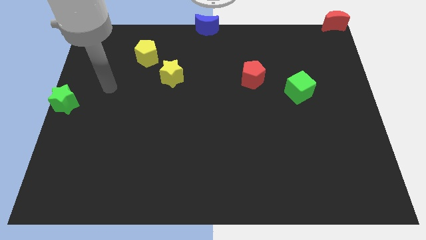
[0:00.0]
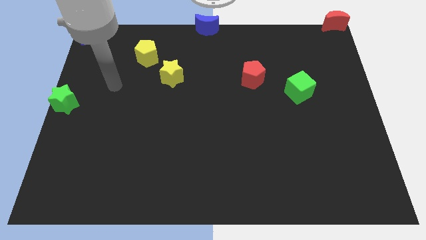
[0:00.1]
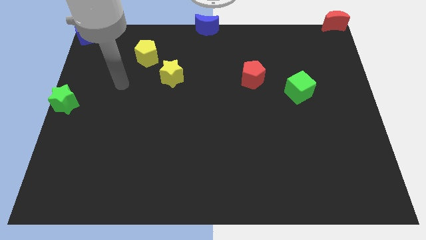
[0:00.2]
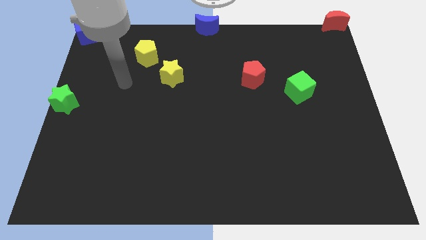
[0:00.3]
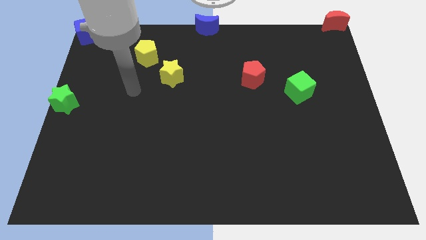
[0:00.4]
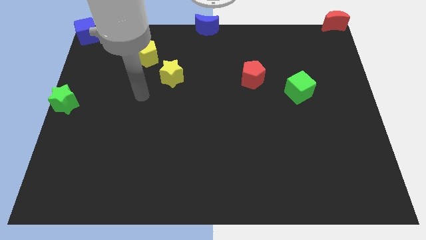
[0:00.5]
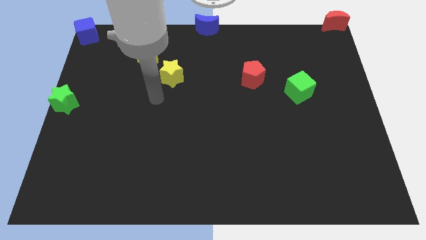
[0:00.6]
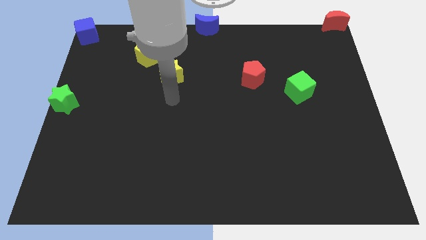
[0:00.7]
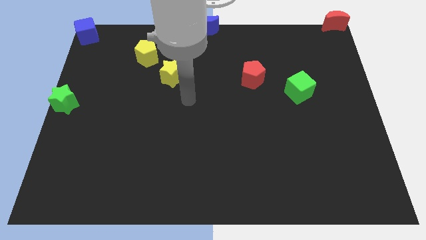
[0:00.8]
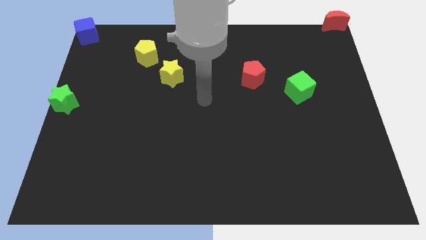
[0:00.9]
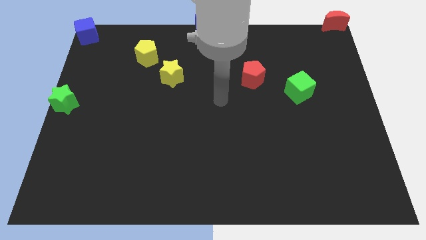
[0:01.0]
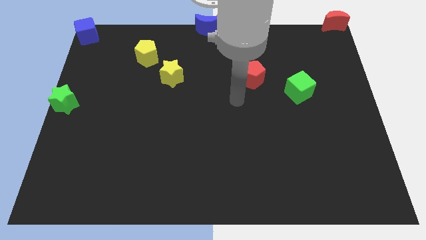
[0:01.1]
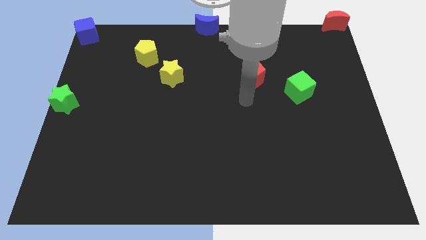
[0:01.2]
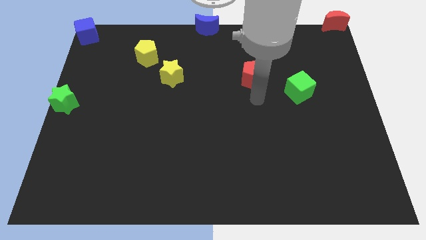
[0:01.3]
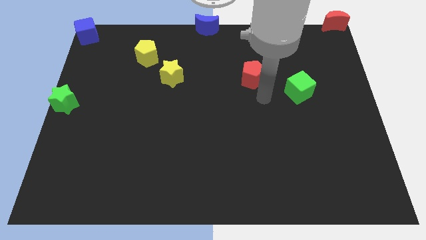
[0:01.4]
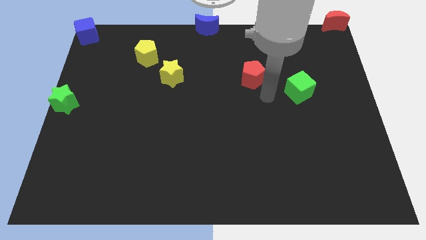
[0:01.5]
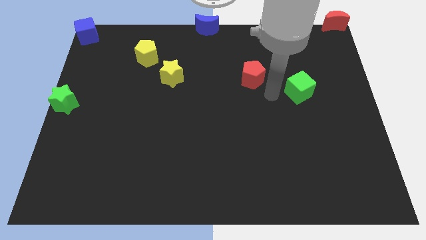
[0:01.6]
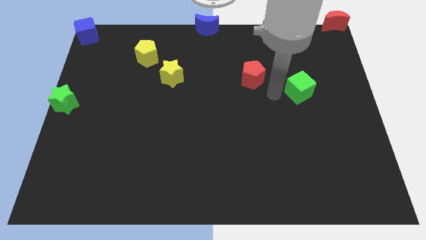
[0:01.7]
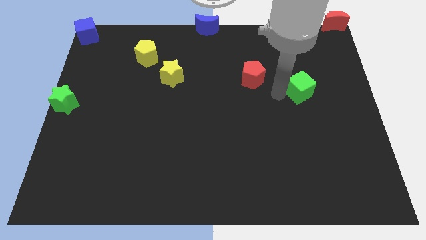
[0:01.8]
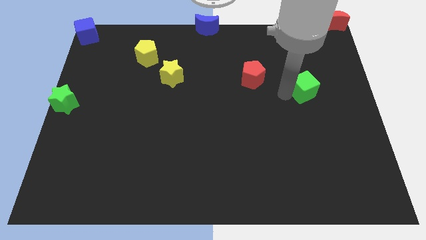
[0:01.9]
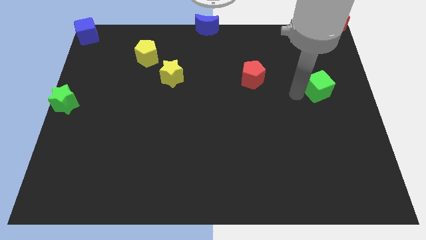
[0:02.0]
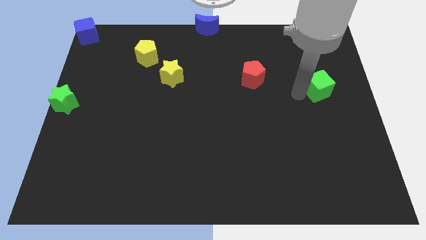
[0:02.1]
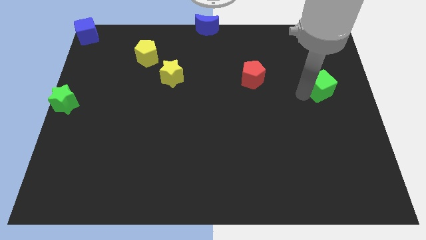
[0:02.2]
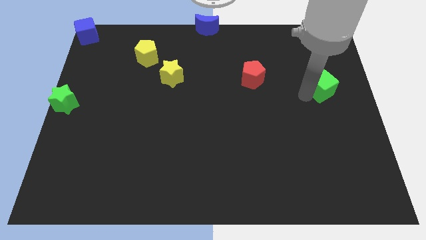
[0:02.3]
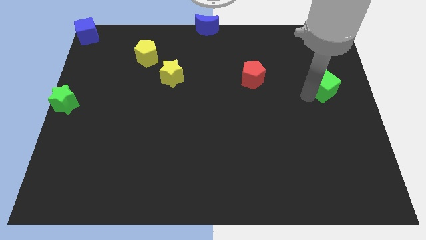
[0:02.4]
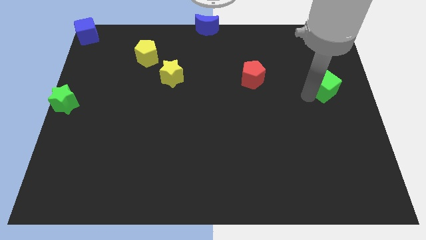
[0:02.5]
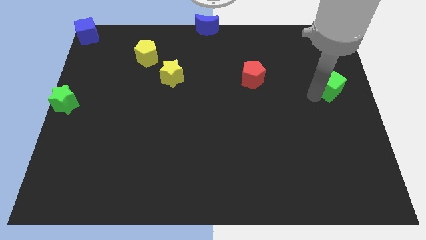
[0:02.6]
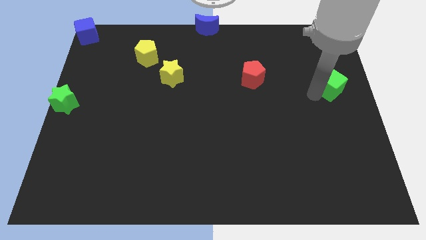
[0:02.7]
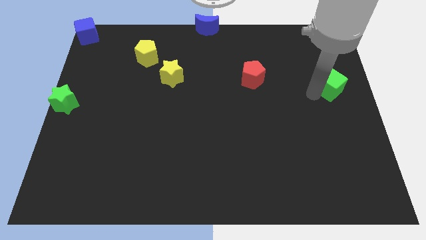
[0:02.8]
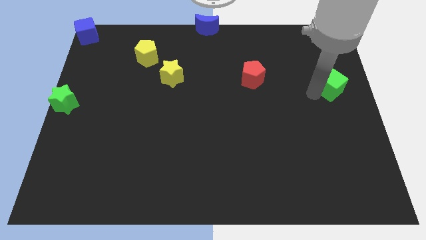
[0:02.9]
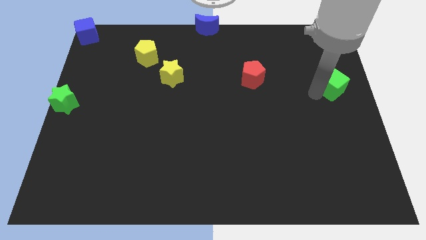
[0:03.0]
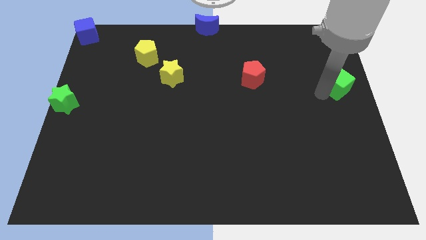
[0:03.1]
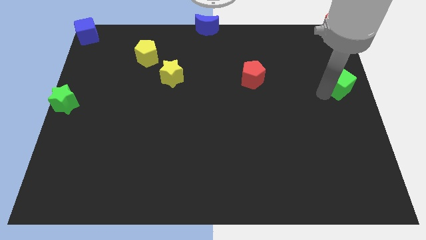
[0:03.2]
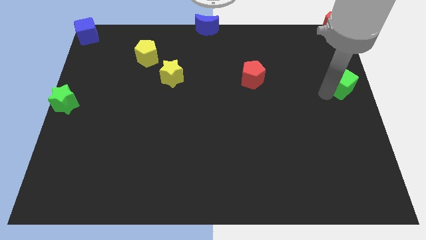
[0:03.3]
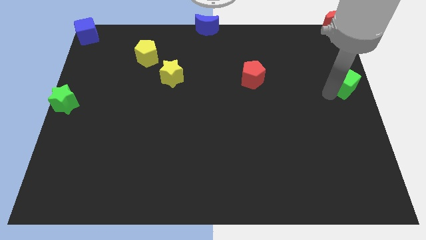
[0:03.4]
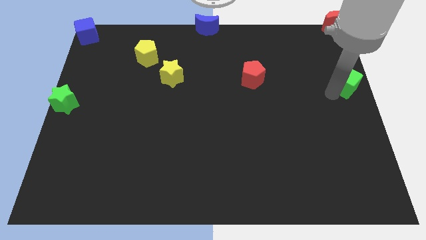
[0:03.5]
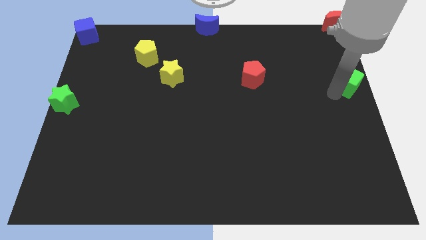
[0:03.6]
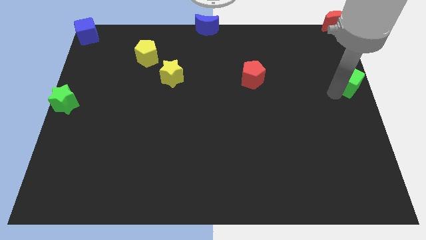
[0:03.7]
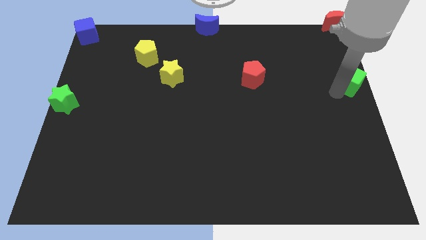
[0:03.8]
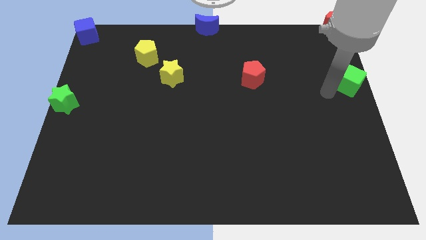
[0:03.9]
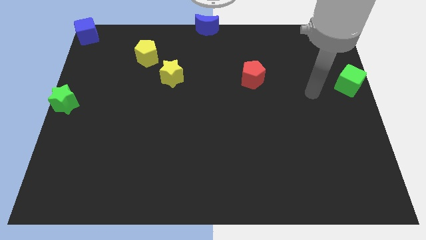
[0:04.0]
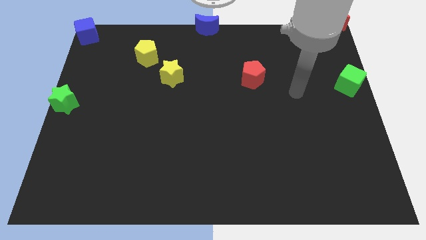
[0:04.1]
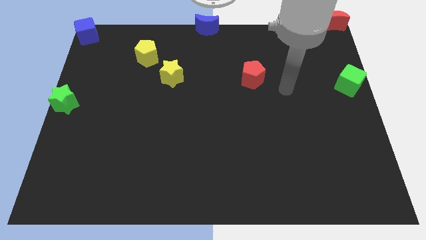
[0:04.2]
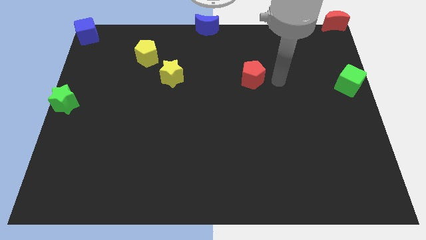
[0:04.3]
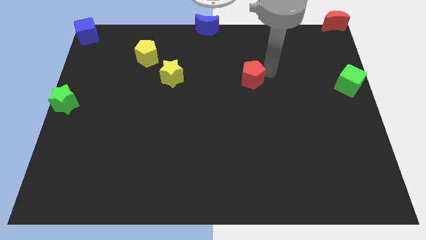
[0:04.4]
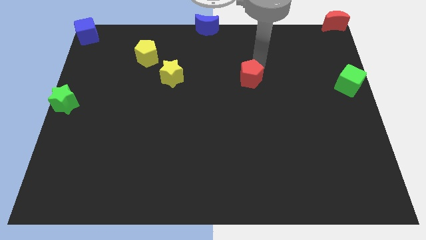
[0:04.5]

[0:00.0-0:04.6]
push the green cube towrads the right center of the board

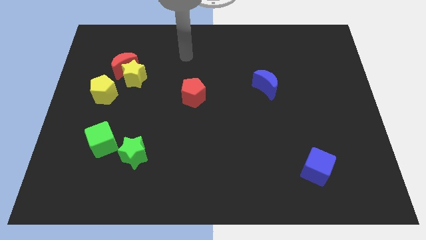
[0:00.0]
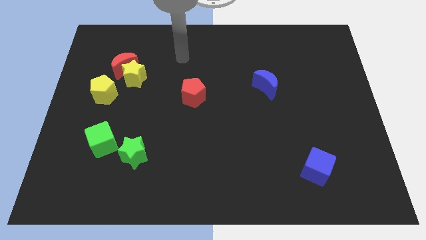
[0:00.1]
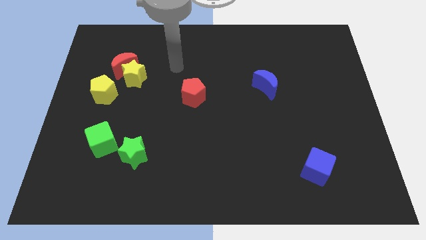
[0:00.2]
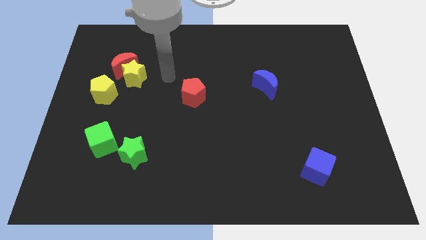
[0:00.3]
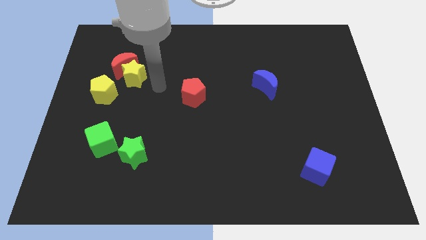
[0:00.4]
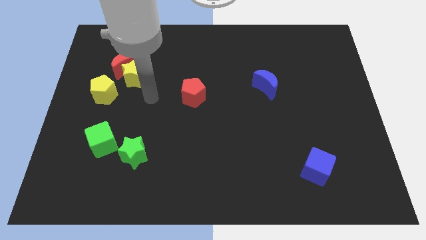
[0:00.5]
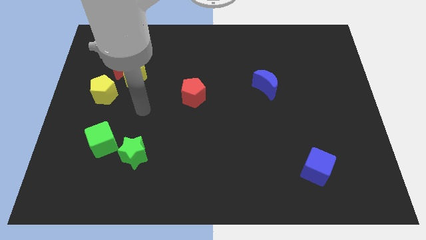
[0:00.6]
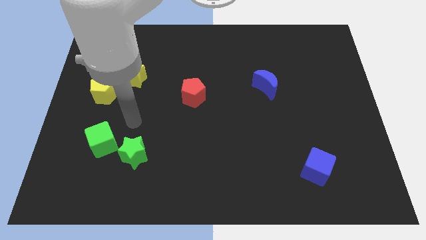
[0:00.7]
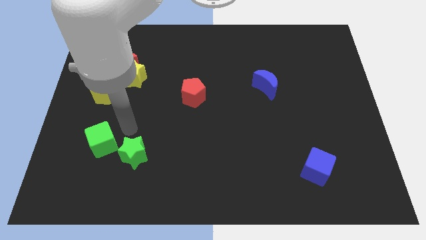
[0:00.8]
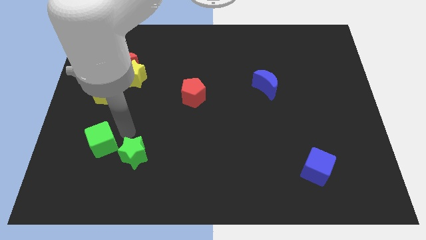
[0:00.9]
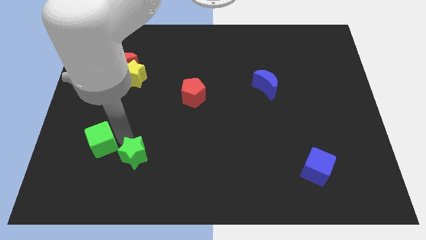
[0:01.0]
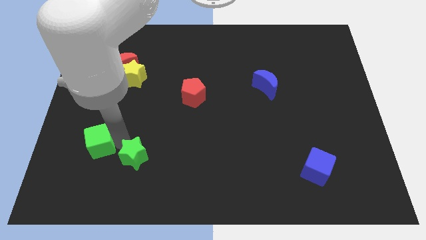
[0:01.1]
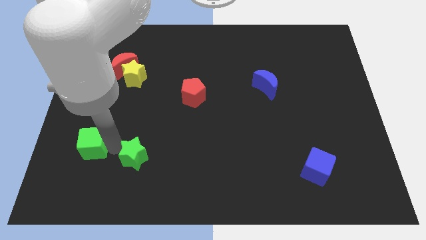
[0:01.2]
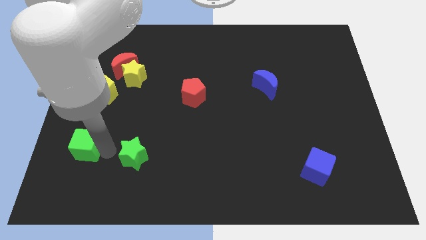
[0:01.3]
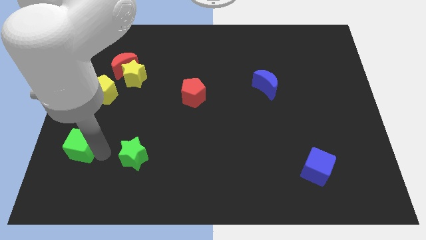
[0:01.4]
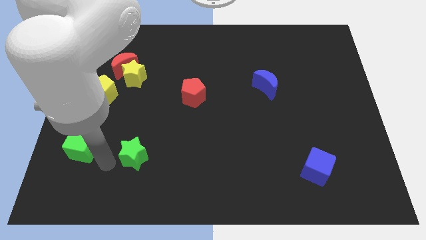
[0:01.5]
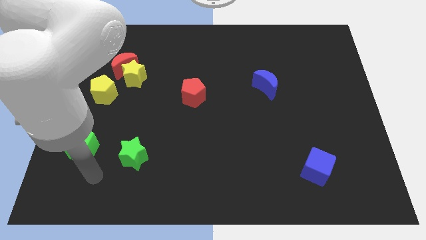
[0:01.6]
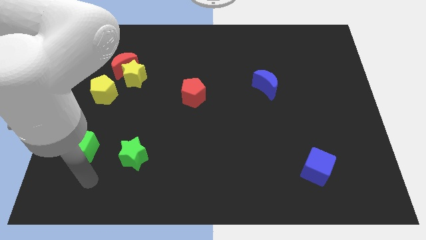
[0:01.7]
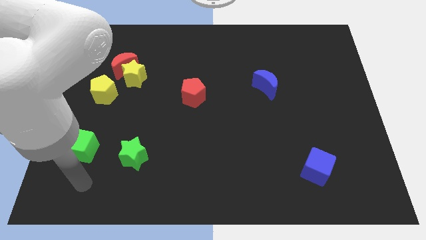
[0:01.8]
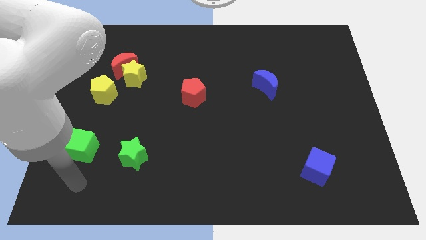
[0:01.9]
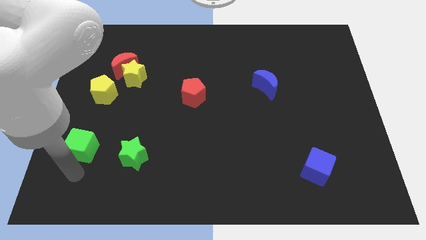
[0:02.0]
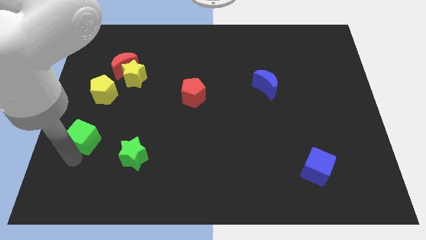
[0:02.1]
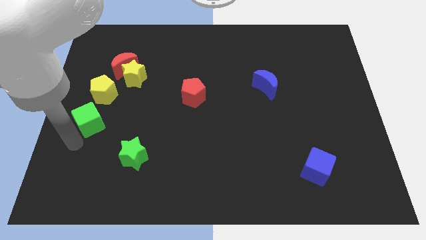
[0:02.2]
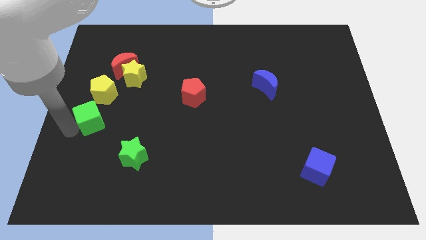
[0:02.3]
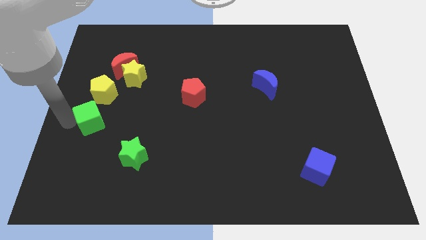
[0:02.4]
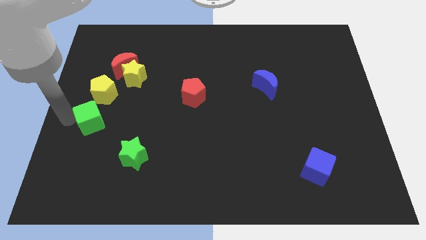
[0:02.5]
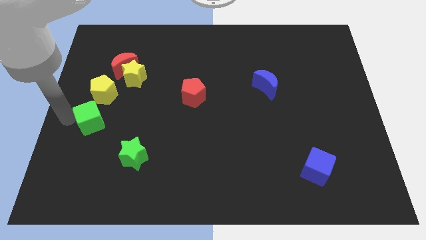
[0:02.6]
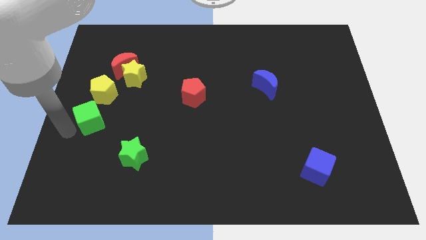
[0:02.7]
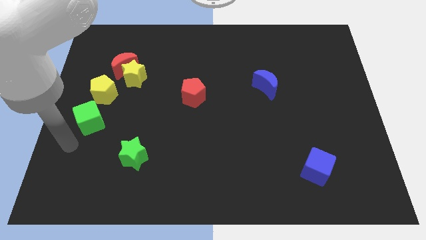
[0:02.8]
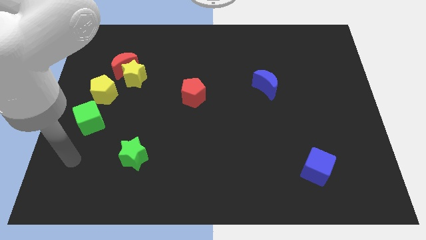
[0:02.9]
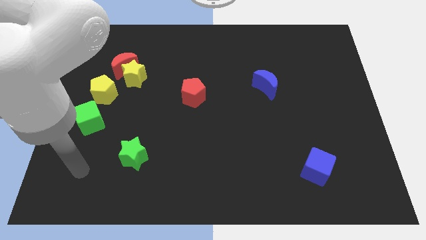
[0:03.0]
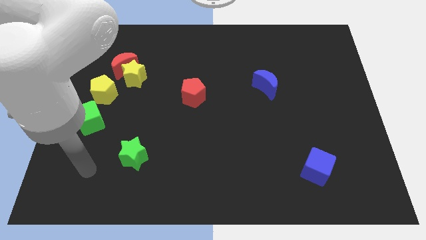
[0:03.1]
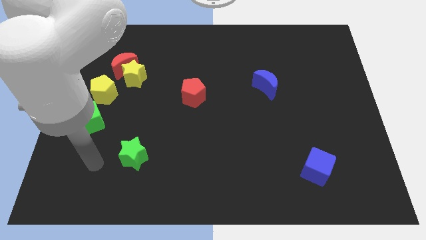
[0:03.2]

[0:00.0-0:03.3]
seperate the green cube and green star

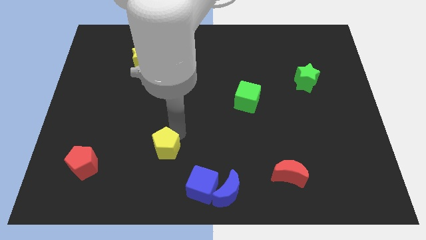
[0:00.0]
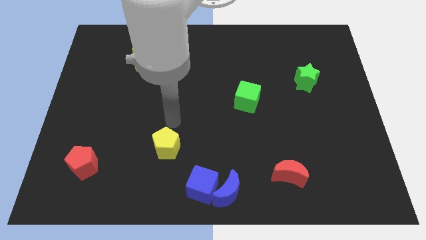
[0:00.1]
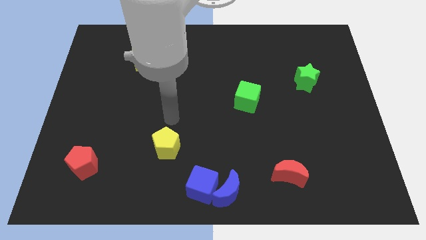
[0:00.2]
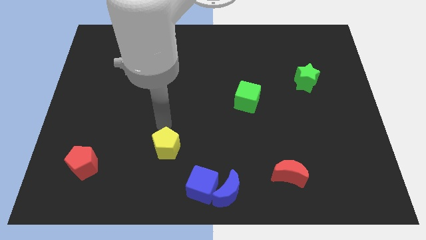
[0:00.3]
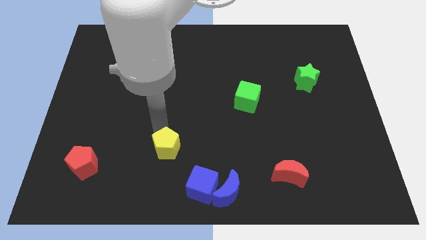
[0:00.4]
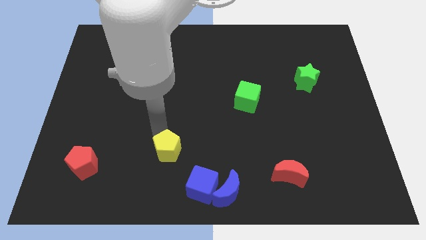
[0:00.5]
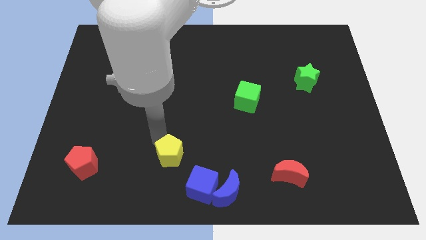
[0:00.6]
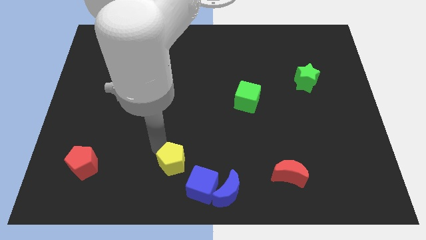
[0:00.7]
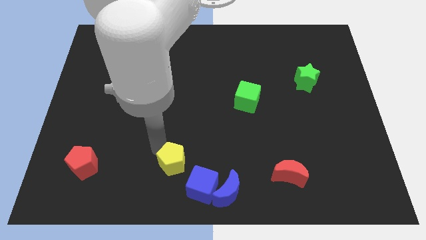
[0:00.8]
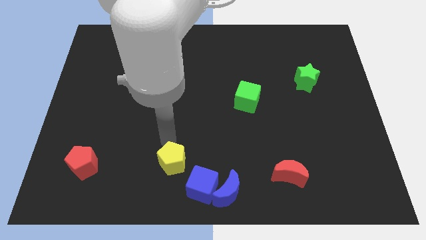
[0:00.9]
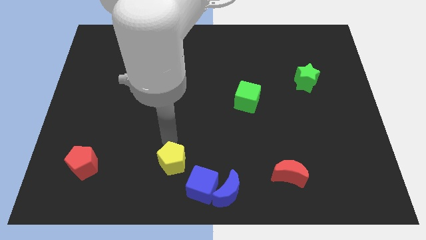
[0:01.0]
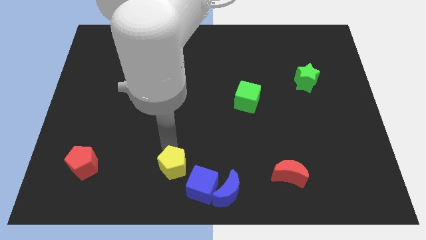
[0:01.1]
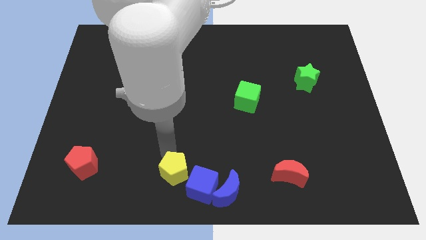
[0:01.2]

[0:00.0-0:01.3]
move the yellow pentagon to the right of the red pentagon
